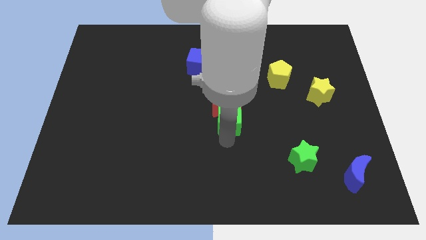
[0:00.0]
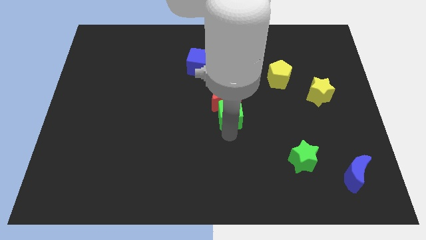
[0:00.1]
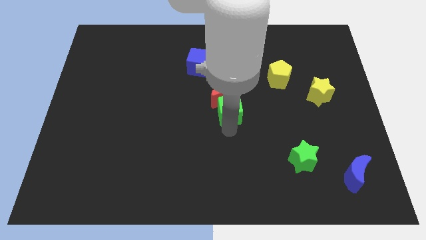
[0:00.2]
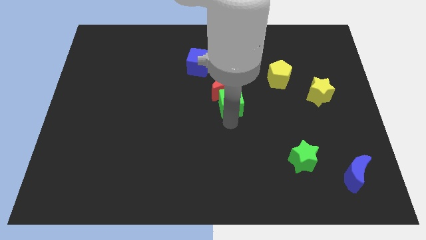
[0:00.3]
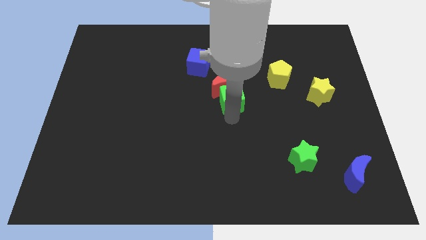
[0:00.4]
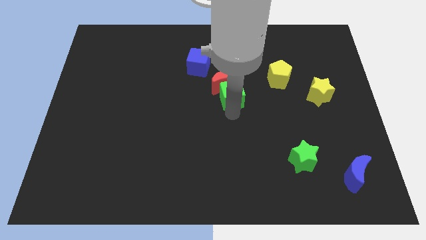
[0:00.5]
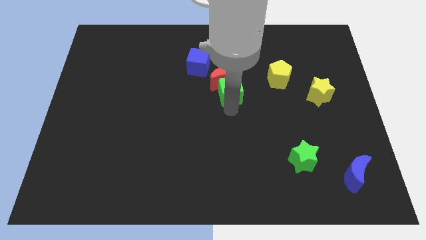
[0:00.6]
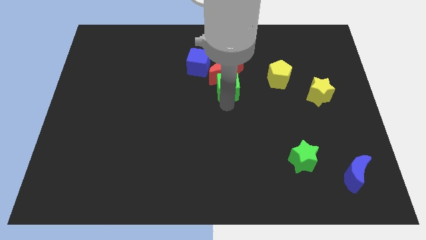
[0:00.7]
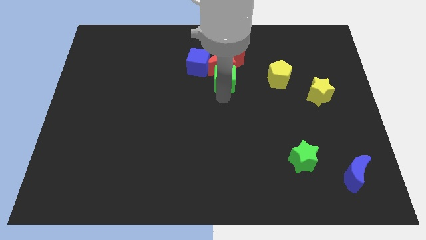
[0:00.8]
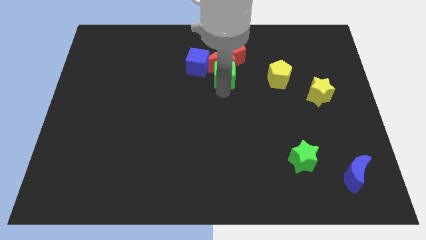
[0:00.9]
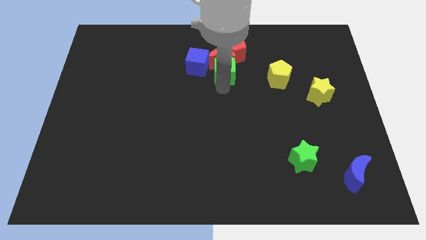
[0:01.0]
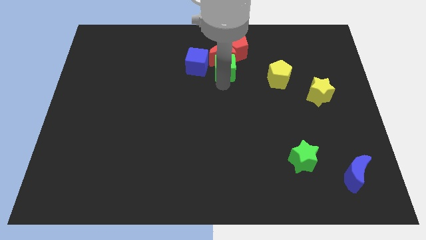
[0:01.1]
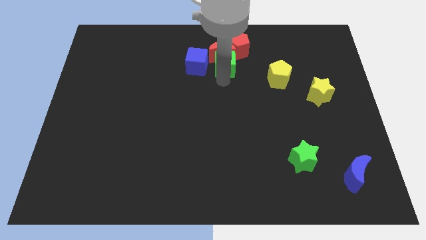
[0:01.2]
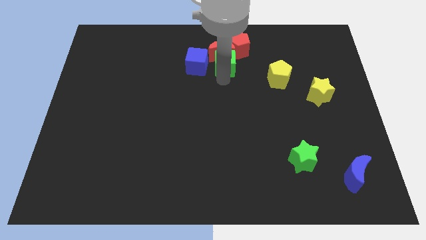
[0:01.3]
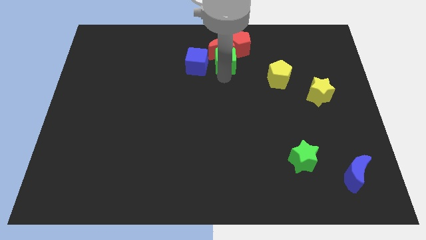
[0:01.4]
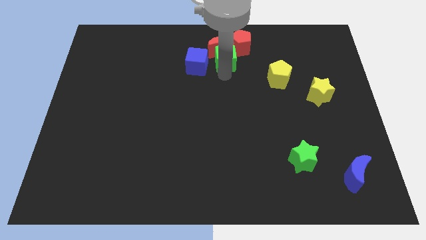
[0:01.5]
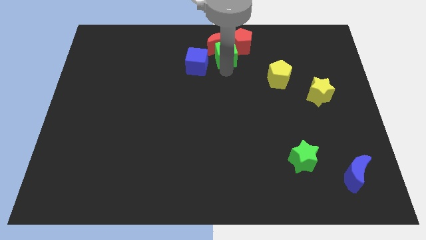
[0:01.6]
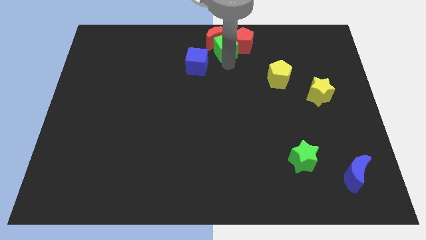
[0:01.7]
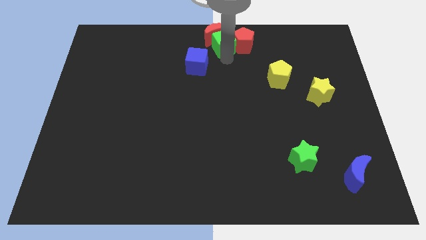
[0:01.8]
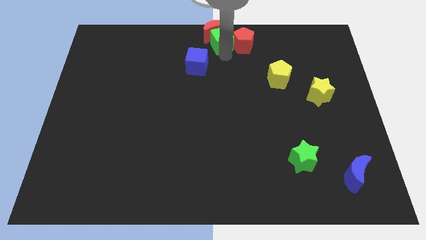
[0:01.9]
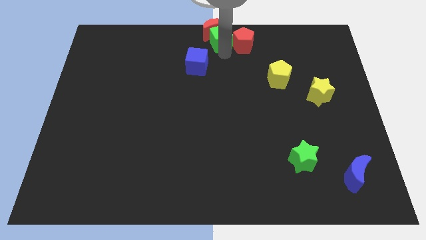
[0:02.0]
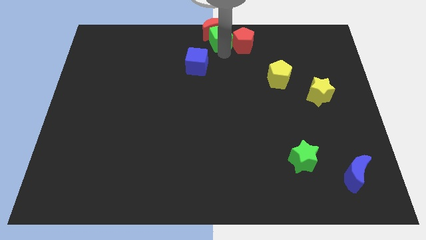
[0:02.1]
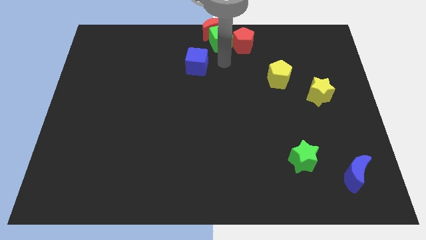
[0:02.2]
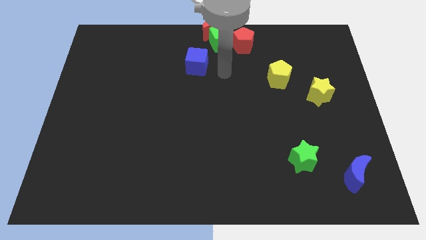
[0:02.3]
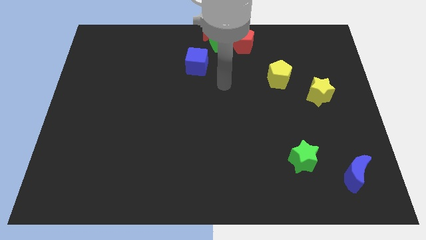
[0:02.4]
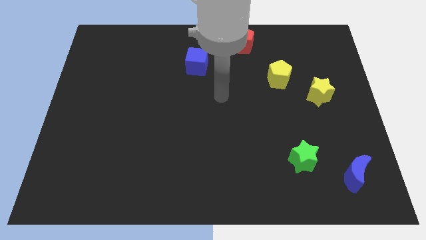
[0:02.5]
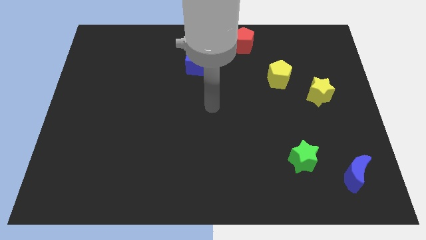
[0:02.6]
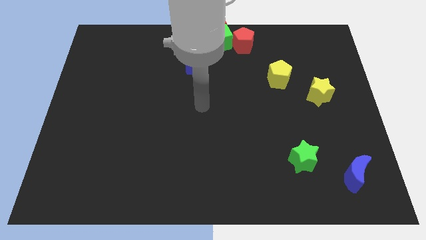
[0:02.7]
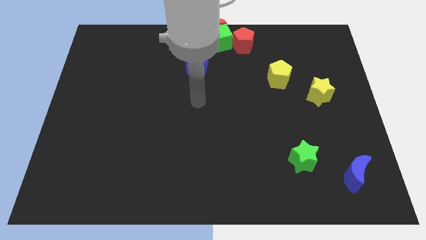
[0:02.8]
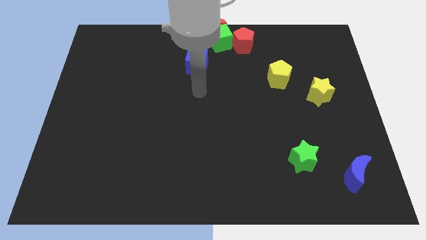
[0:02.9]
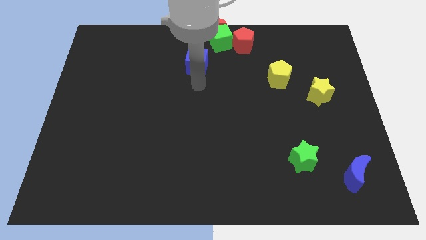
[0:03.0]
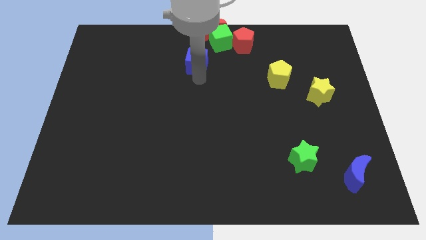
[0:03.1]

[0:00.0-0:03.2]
move the red crescent and red pentagon towards top center with the green cube

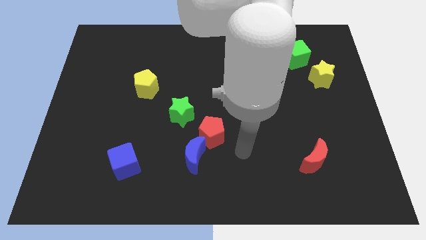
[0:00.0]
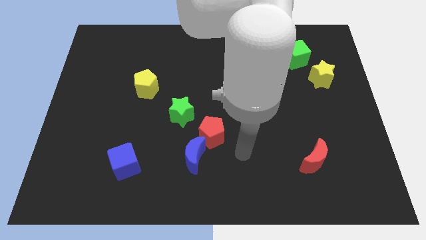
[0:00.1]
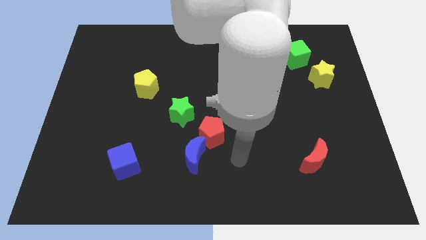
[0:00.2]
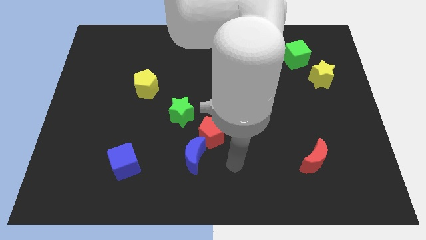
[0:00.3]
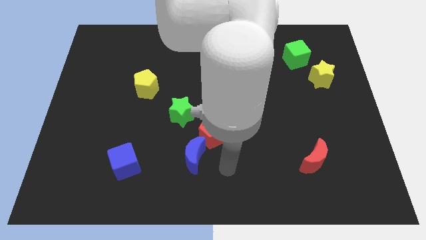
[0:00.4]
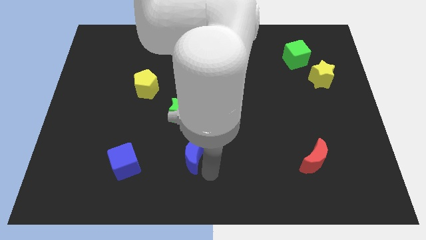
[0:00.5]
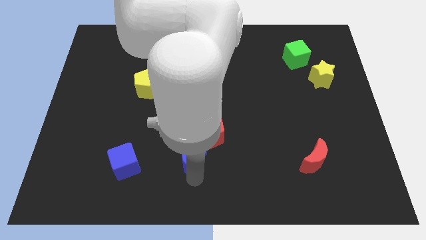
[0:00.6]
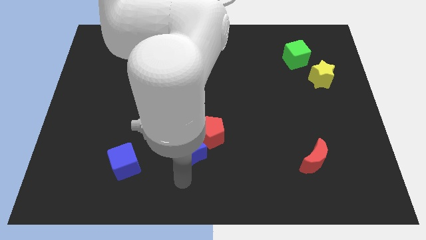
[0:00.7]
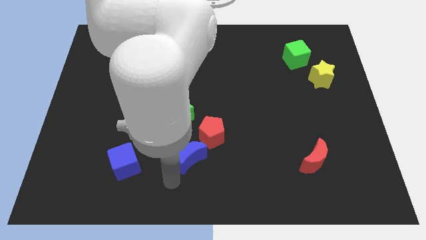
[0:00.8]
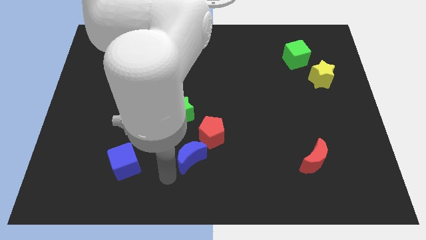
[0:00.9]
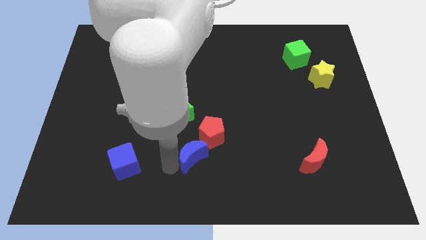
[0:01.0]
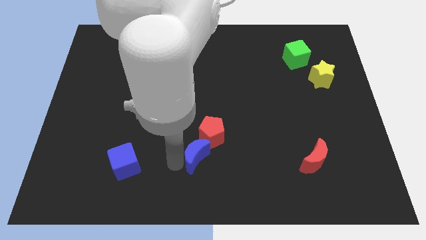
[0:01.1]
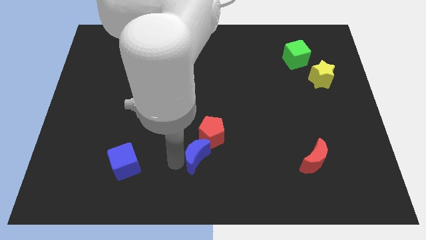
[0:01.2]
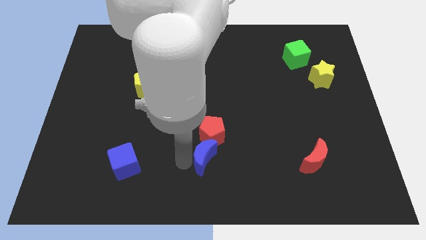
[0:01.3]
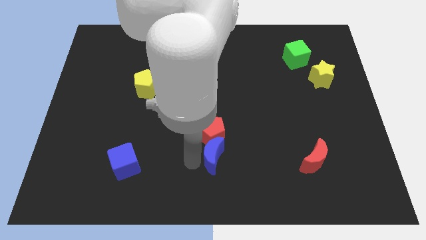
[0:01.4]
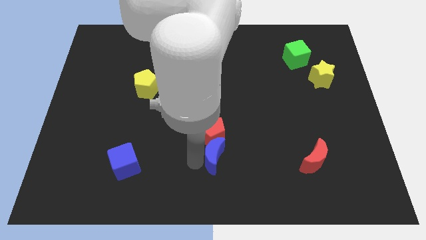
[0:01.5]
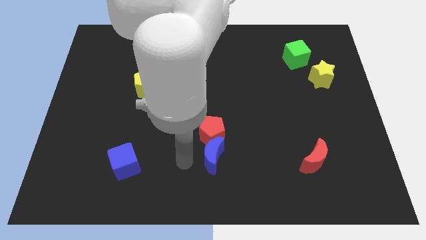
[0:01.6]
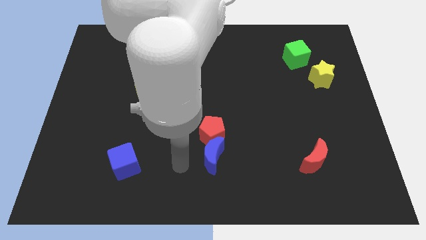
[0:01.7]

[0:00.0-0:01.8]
place the blue moon below the red pentagon

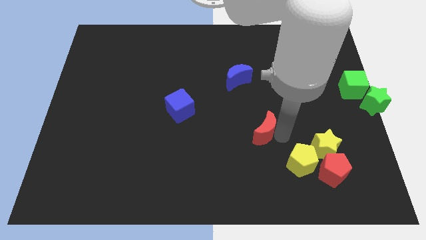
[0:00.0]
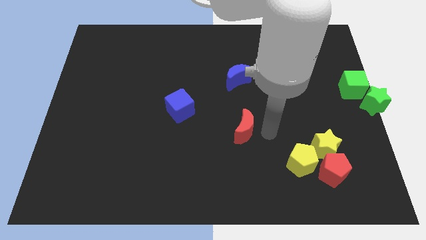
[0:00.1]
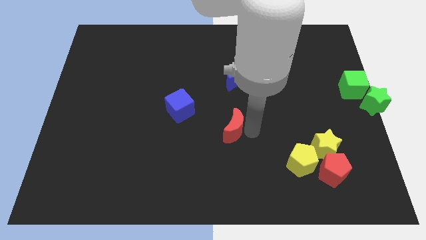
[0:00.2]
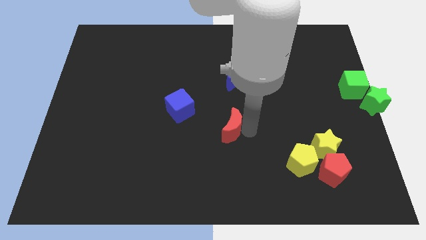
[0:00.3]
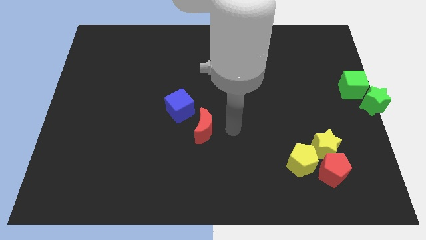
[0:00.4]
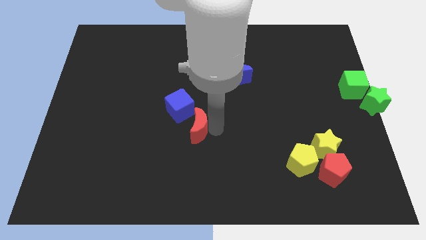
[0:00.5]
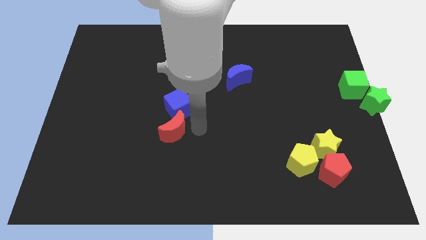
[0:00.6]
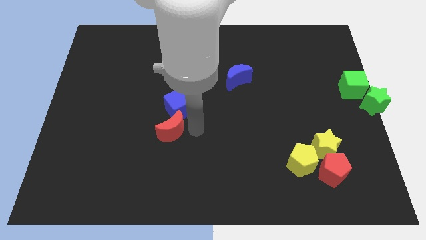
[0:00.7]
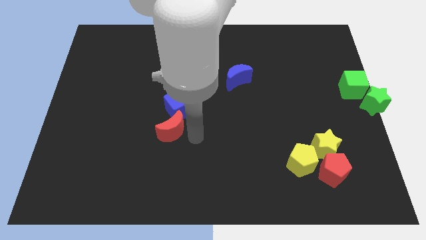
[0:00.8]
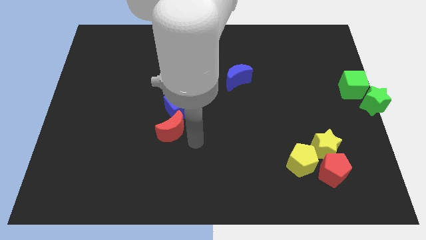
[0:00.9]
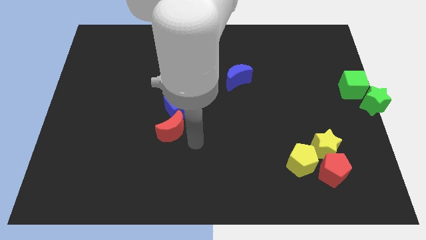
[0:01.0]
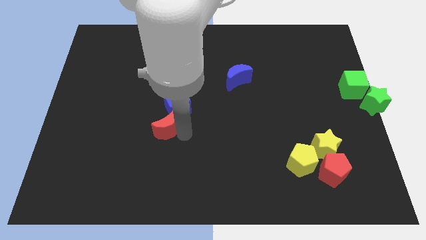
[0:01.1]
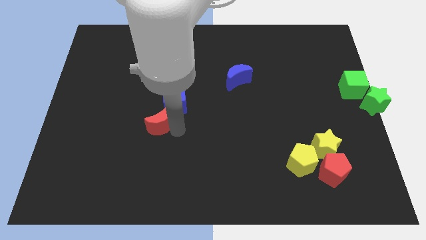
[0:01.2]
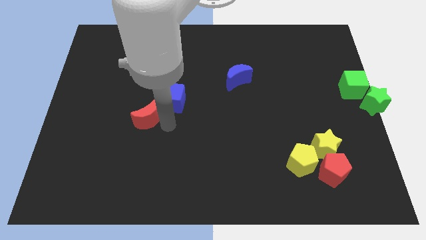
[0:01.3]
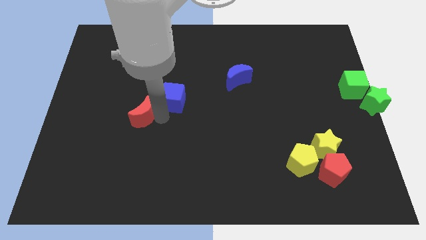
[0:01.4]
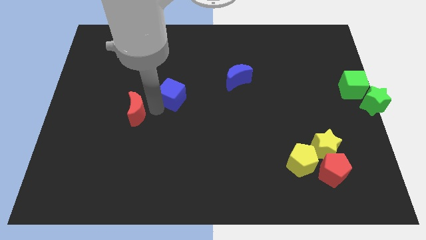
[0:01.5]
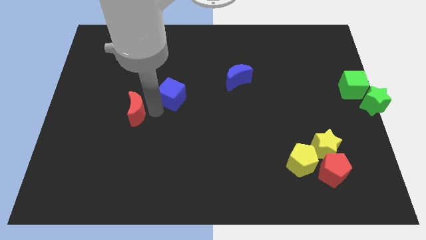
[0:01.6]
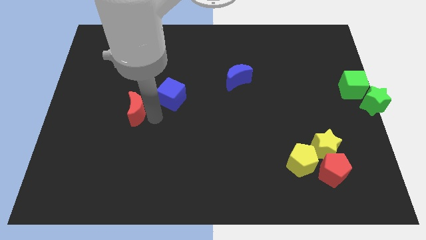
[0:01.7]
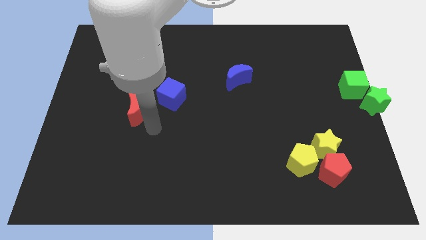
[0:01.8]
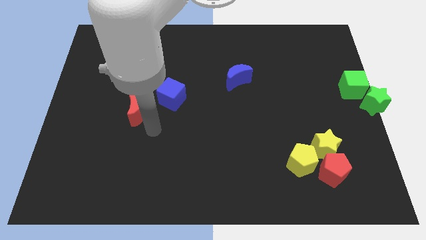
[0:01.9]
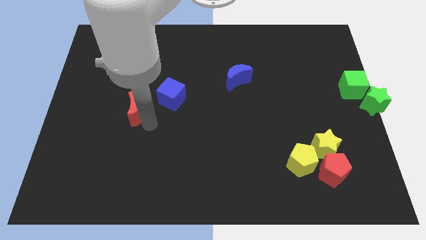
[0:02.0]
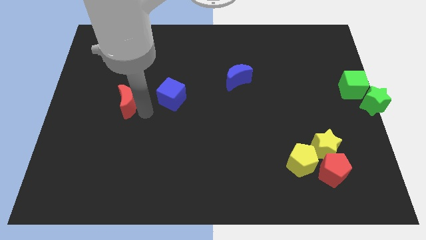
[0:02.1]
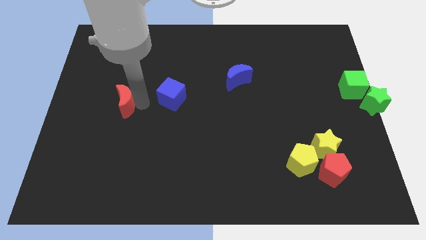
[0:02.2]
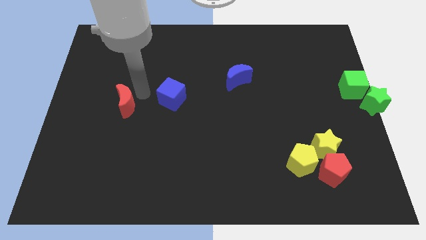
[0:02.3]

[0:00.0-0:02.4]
push the red crescent into the blue square

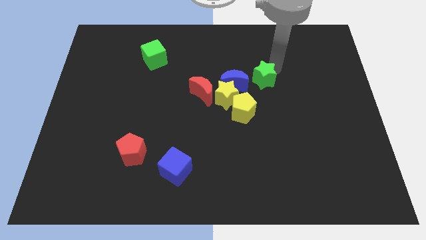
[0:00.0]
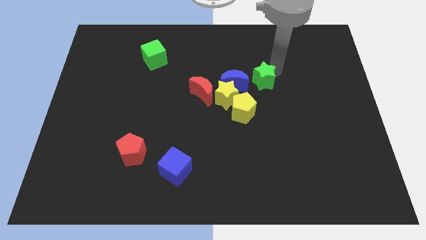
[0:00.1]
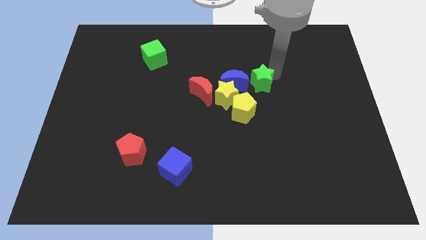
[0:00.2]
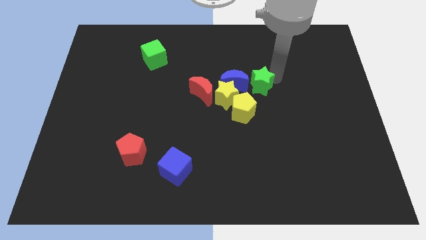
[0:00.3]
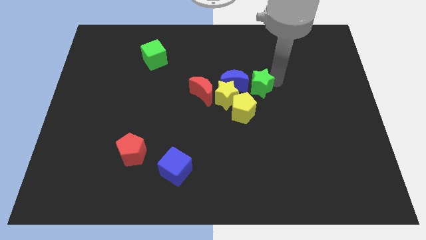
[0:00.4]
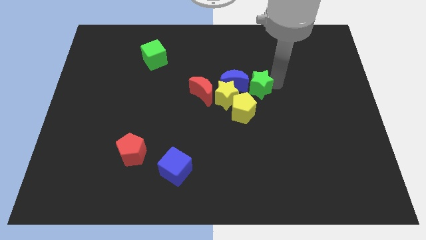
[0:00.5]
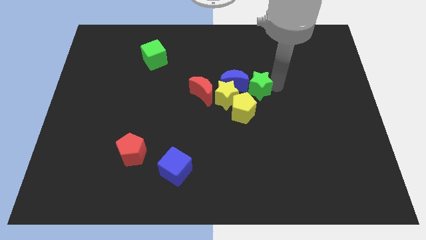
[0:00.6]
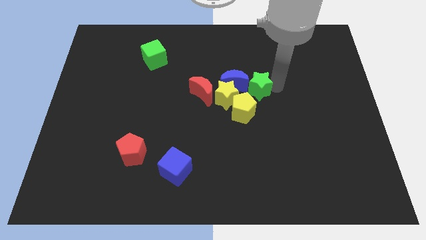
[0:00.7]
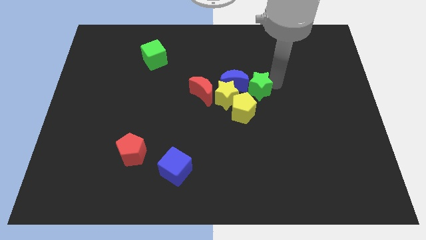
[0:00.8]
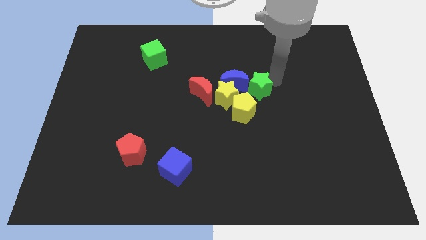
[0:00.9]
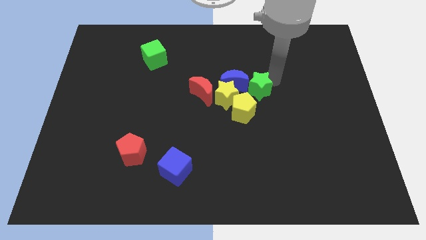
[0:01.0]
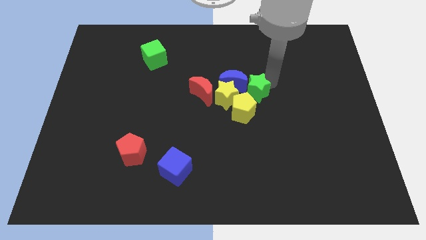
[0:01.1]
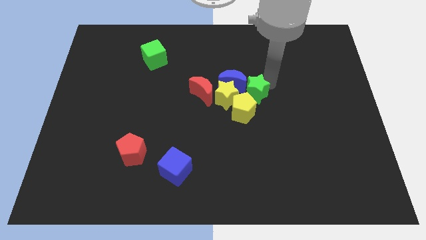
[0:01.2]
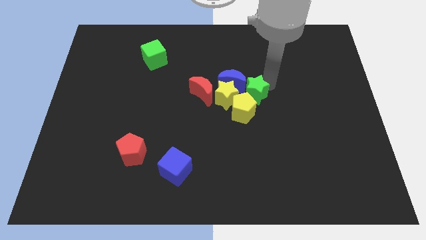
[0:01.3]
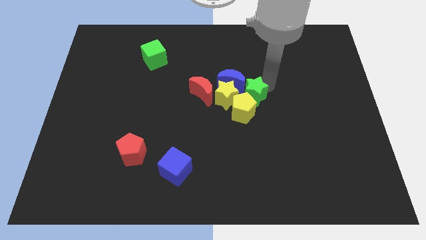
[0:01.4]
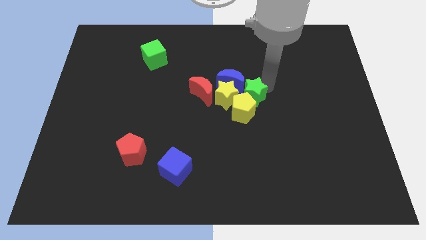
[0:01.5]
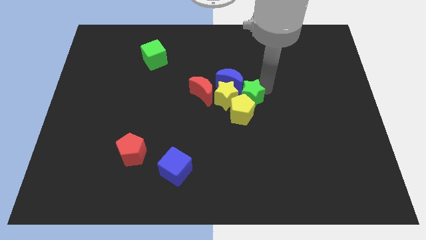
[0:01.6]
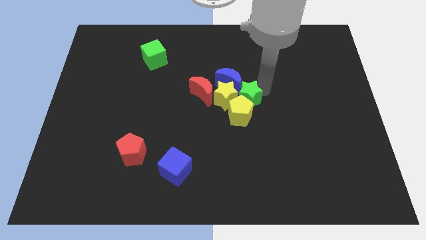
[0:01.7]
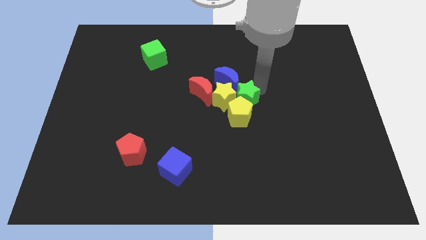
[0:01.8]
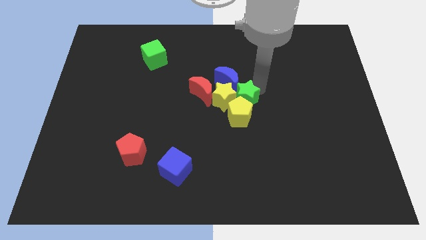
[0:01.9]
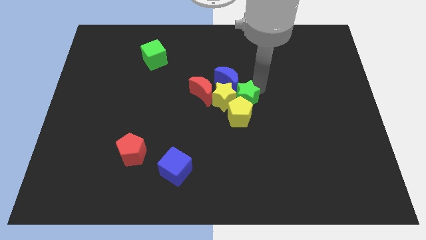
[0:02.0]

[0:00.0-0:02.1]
push the green star to the right of yellow star
